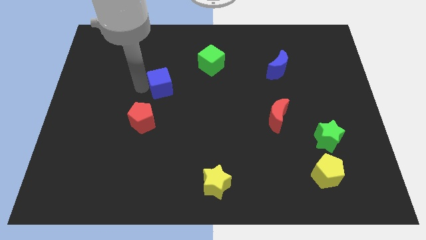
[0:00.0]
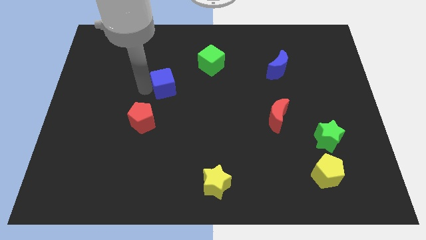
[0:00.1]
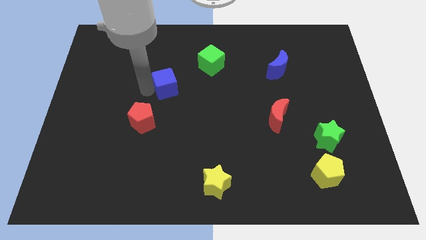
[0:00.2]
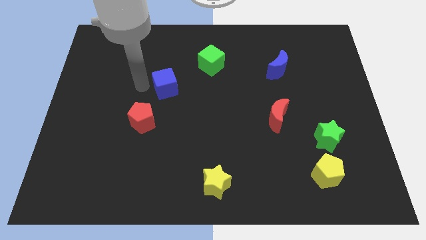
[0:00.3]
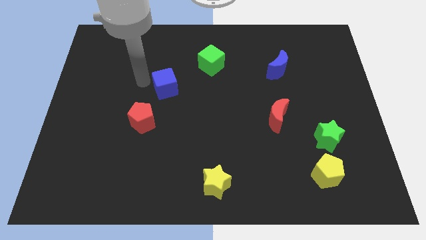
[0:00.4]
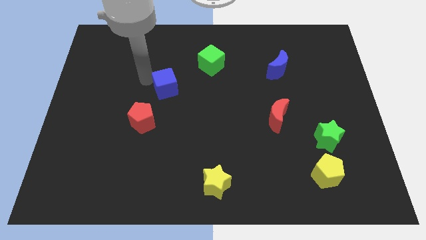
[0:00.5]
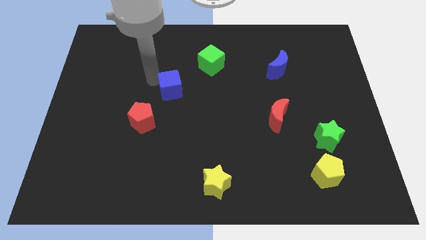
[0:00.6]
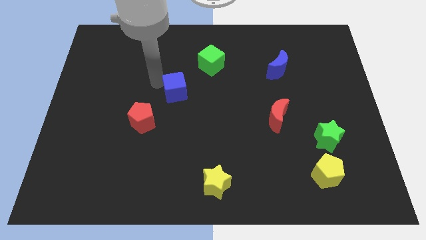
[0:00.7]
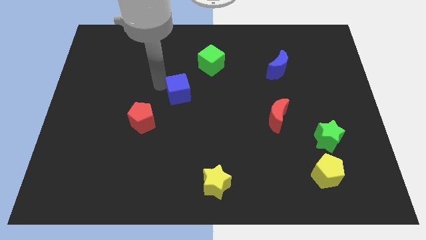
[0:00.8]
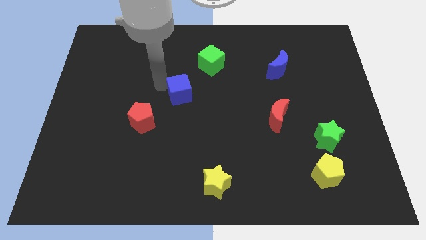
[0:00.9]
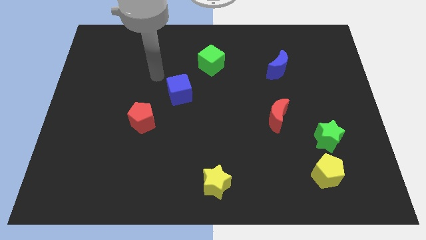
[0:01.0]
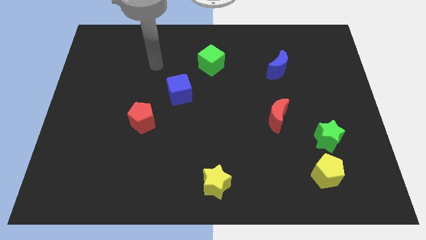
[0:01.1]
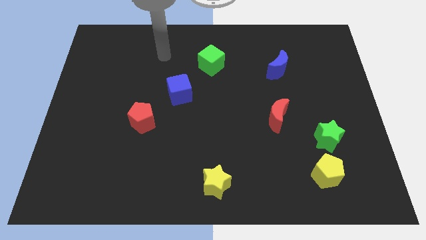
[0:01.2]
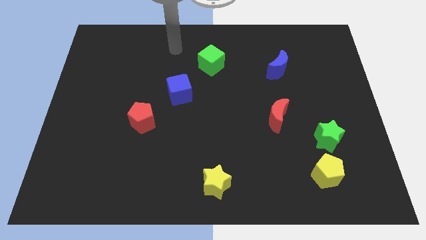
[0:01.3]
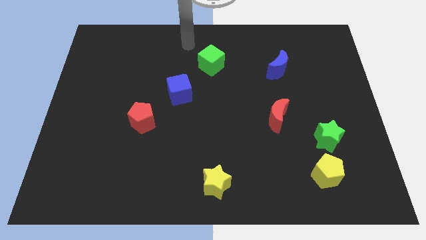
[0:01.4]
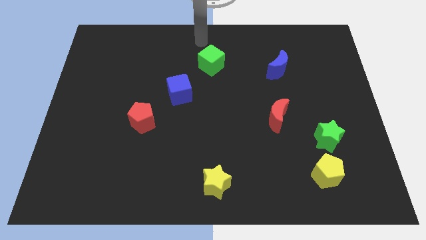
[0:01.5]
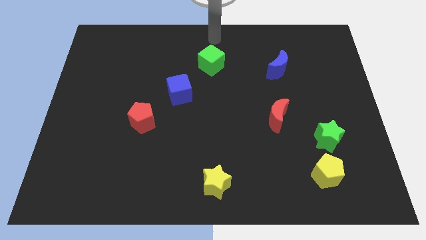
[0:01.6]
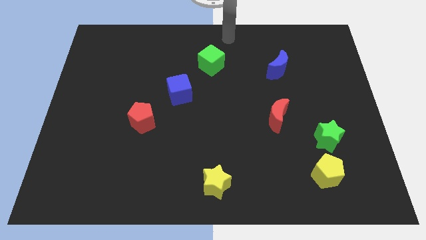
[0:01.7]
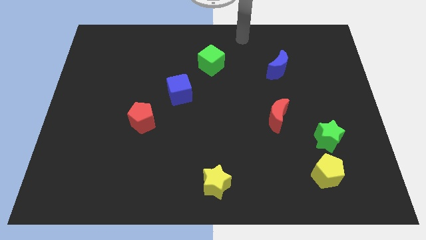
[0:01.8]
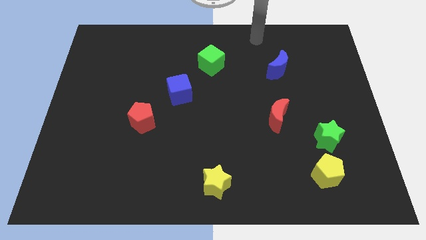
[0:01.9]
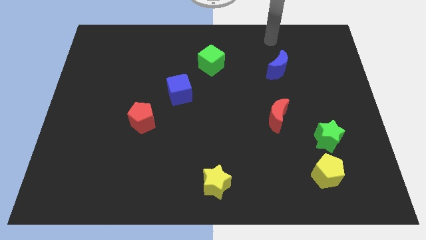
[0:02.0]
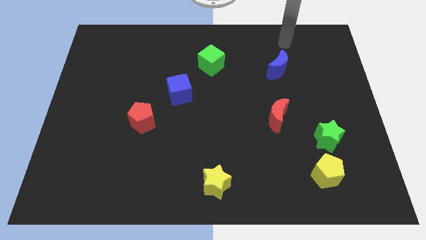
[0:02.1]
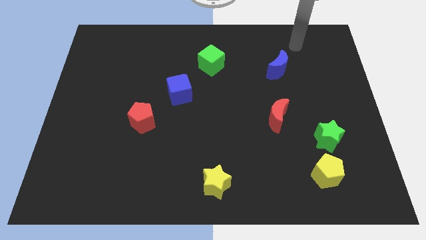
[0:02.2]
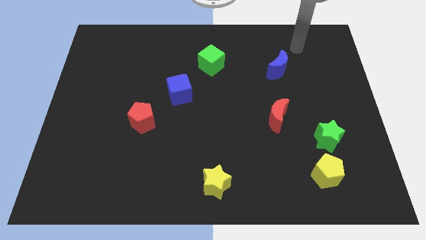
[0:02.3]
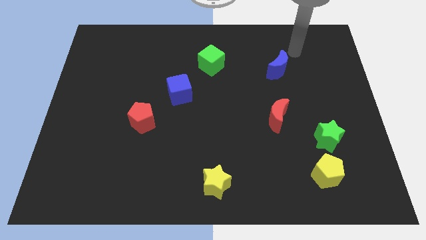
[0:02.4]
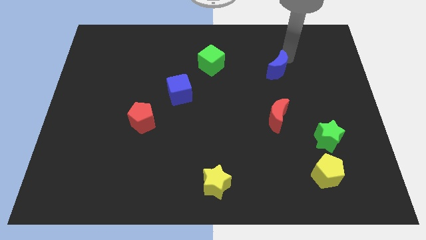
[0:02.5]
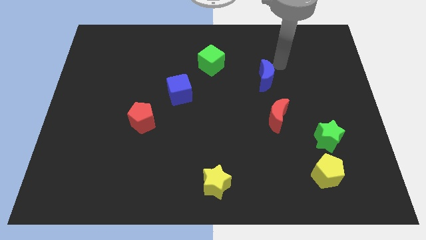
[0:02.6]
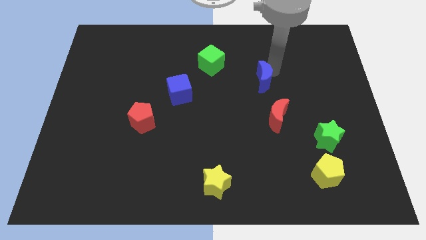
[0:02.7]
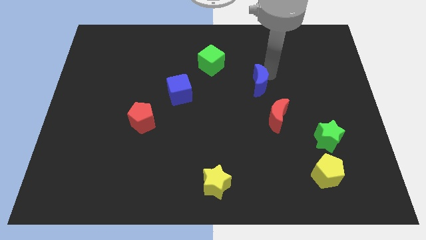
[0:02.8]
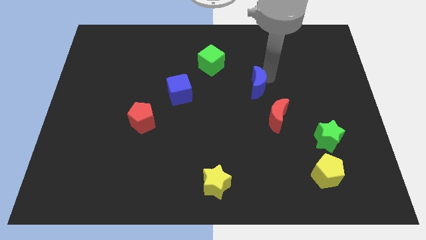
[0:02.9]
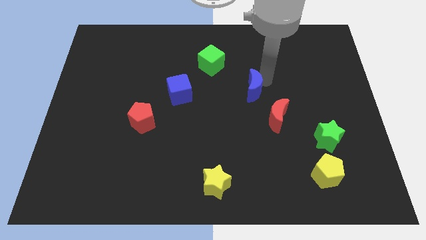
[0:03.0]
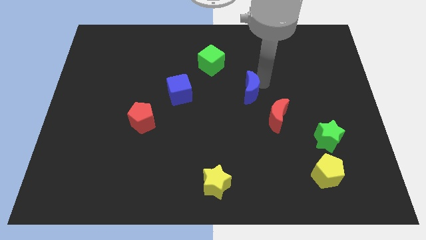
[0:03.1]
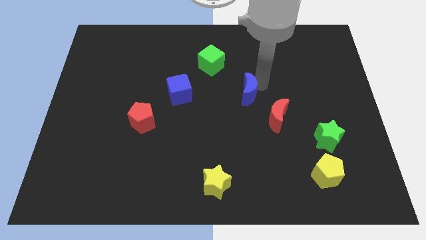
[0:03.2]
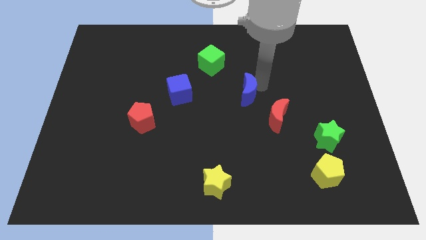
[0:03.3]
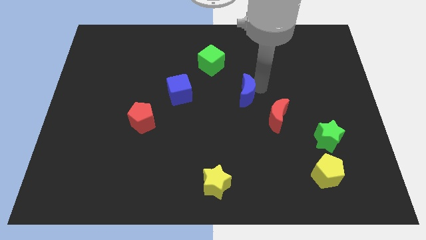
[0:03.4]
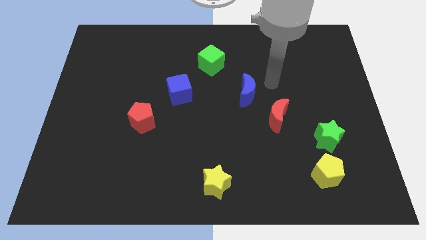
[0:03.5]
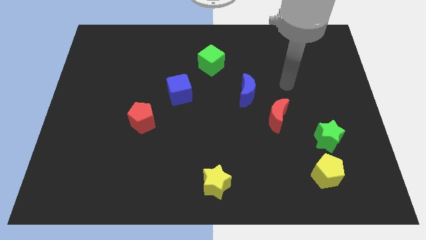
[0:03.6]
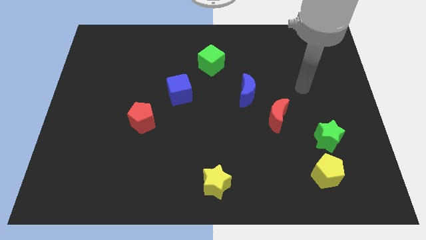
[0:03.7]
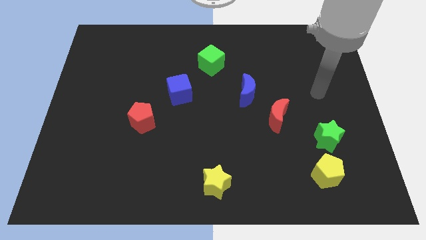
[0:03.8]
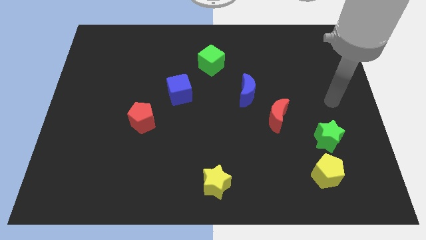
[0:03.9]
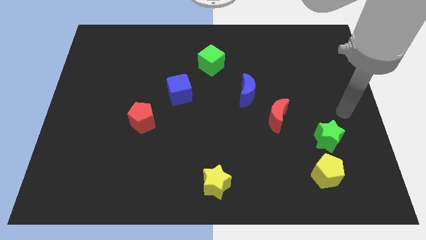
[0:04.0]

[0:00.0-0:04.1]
make a triangle with the help of blue cube green cube and the blue moon

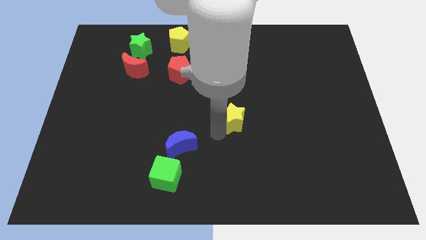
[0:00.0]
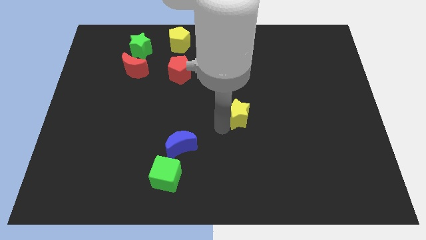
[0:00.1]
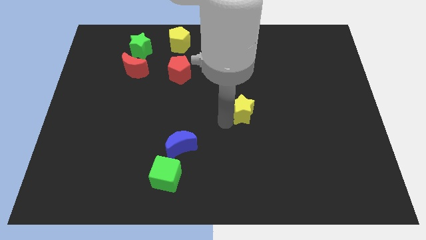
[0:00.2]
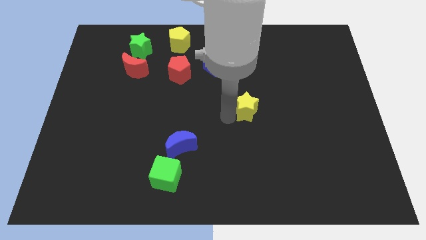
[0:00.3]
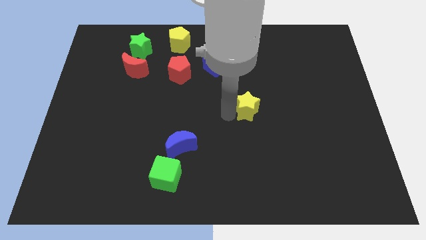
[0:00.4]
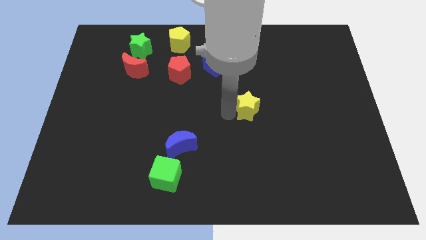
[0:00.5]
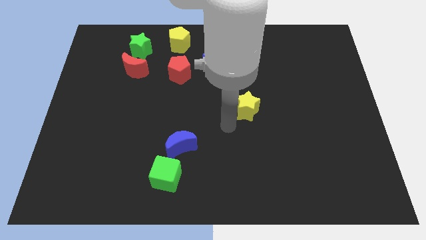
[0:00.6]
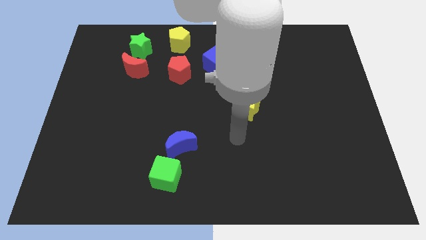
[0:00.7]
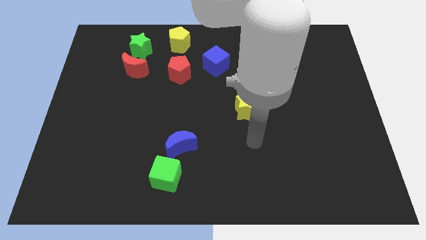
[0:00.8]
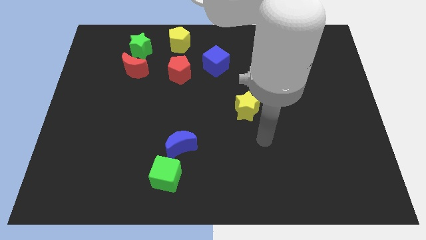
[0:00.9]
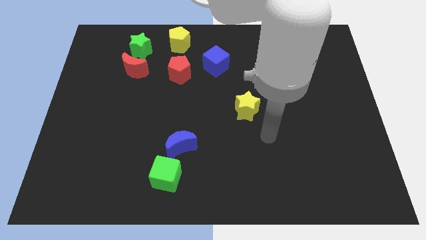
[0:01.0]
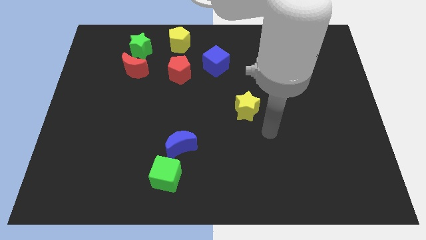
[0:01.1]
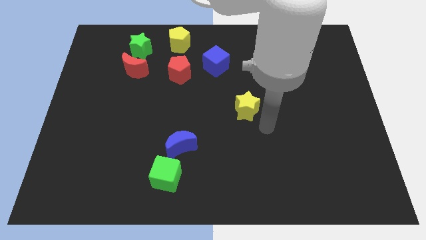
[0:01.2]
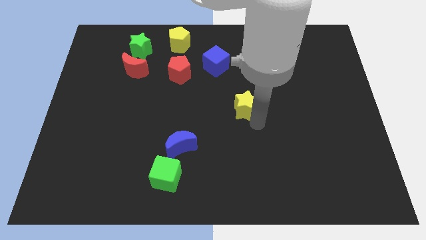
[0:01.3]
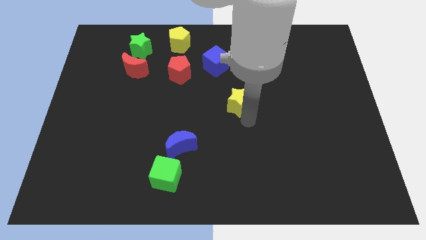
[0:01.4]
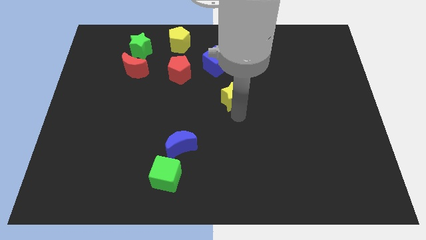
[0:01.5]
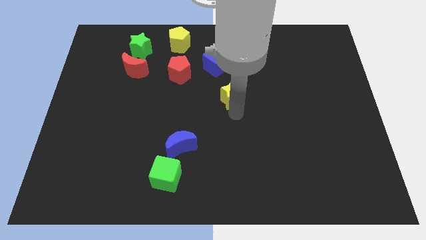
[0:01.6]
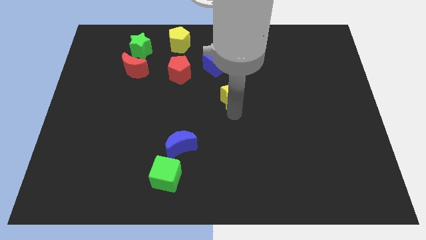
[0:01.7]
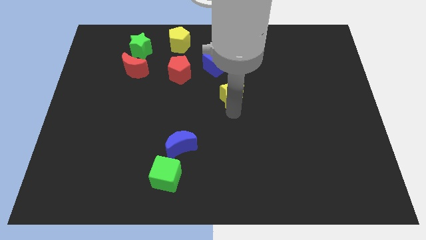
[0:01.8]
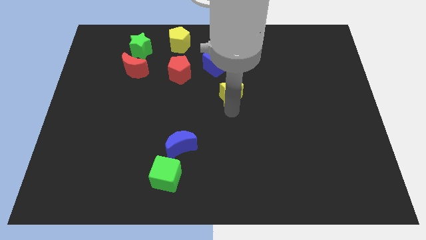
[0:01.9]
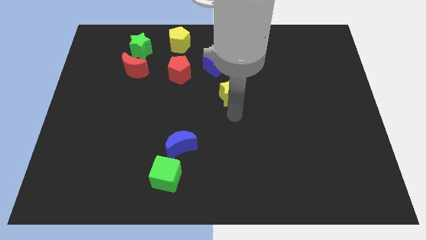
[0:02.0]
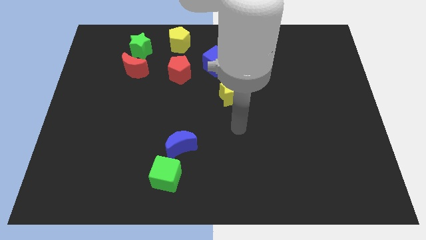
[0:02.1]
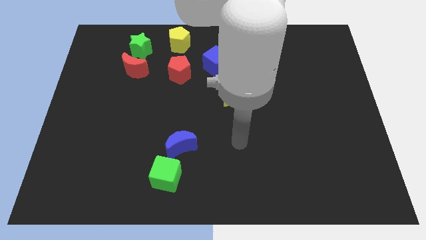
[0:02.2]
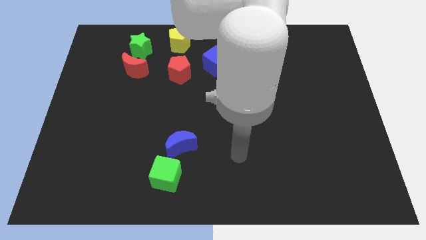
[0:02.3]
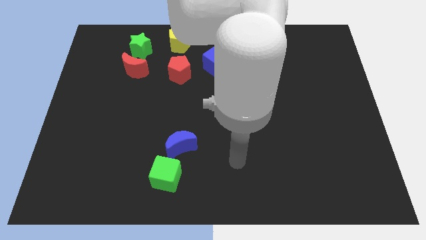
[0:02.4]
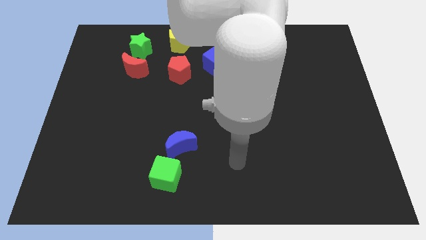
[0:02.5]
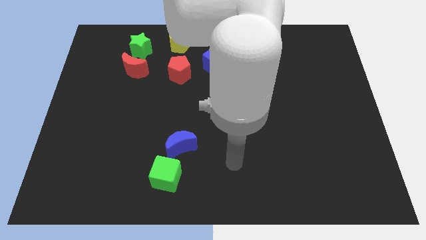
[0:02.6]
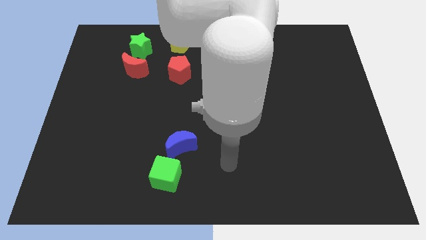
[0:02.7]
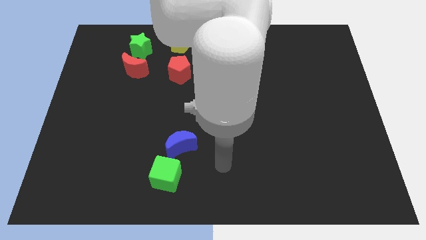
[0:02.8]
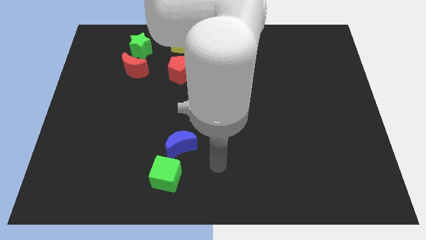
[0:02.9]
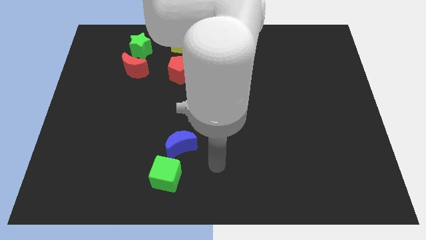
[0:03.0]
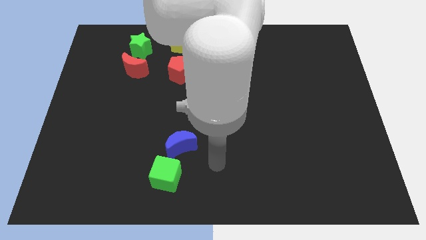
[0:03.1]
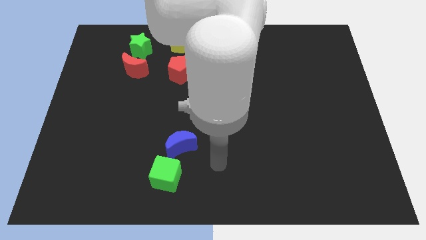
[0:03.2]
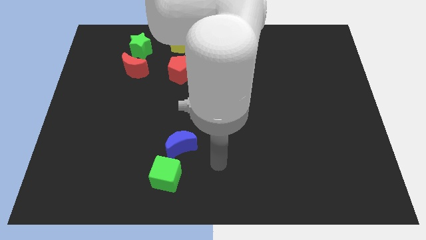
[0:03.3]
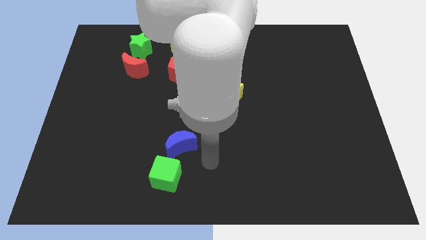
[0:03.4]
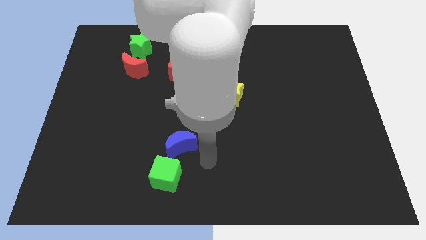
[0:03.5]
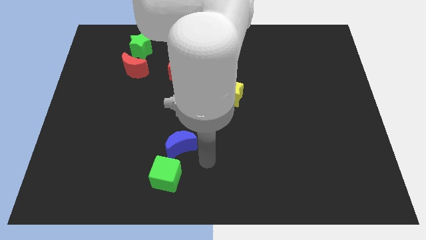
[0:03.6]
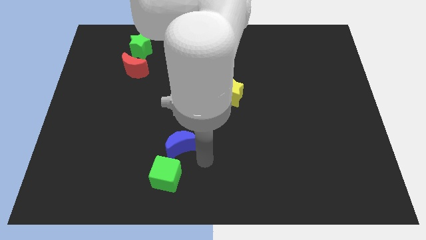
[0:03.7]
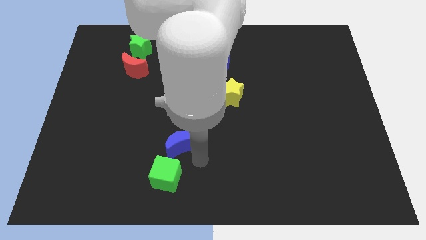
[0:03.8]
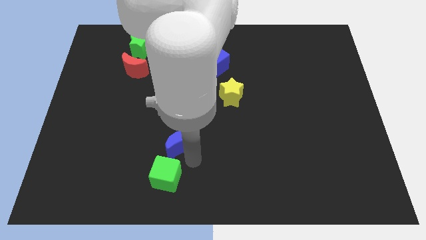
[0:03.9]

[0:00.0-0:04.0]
place the yellow star towards the bottom right side of the blue cube

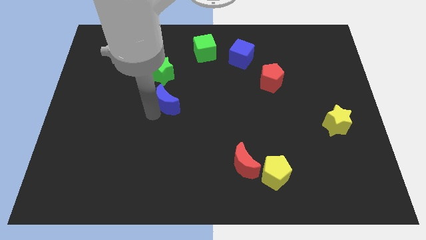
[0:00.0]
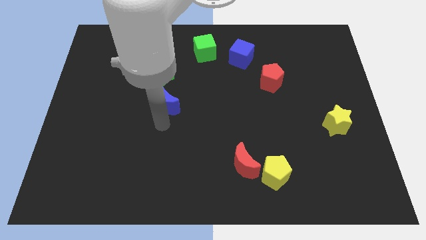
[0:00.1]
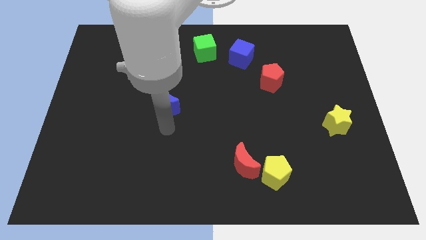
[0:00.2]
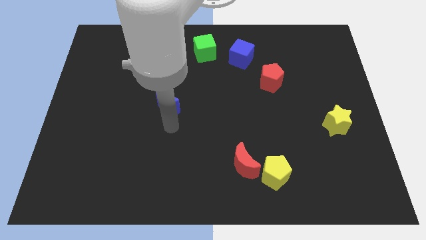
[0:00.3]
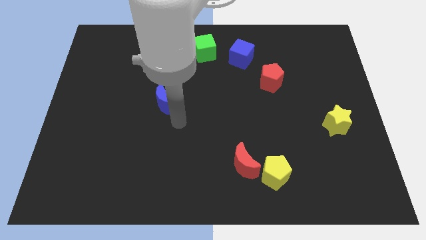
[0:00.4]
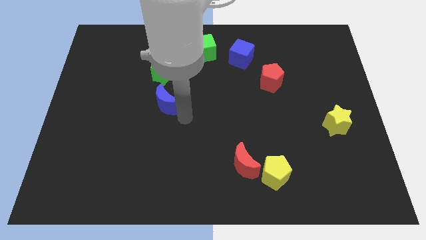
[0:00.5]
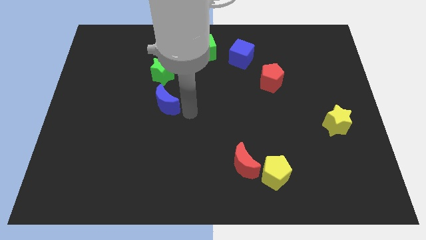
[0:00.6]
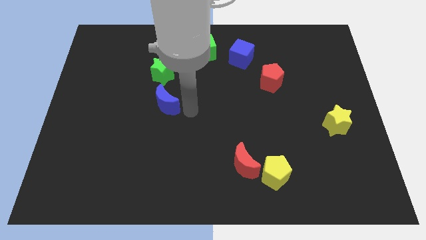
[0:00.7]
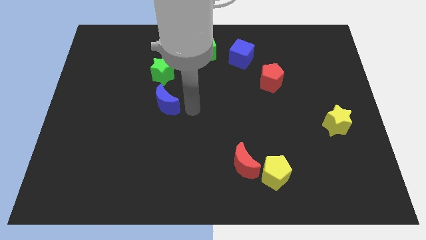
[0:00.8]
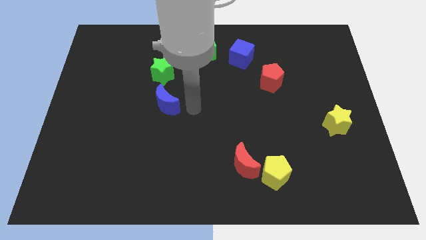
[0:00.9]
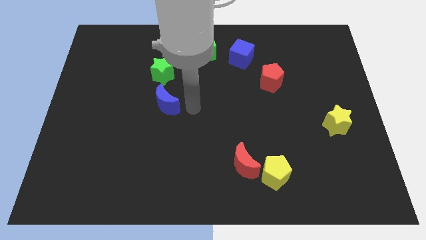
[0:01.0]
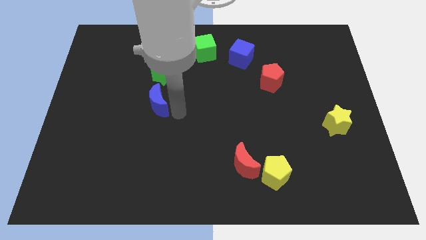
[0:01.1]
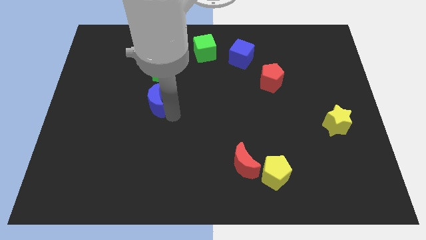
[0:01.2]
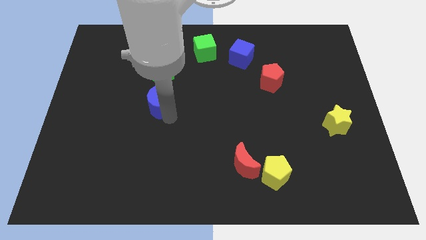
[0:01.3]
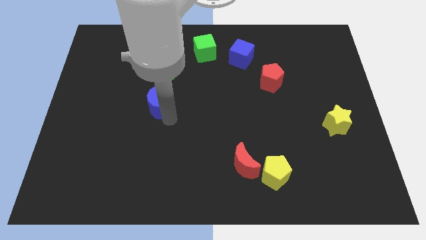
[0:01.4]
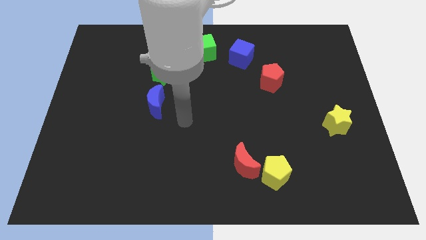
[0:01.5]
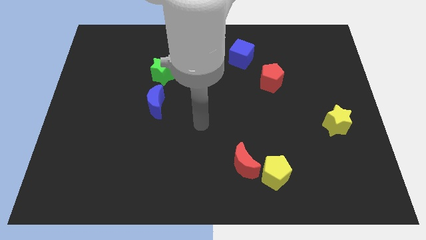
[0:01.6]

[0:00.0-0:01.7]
put the blue crescent vertically below the bottom side of the green star
